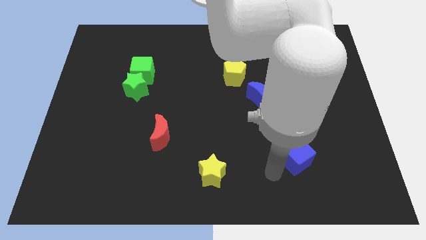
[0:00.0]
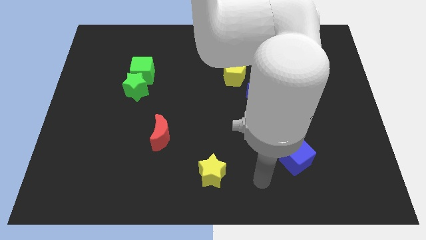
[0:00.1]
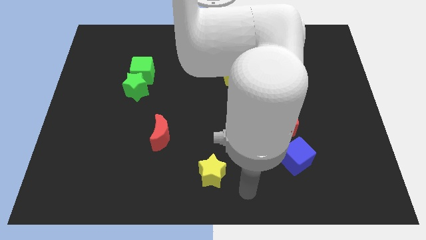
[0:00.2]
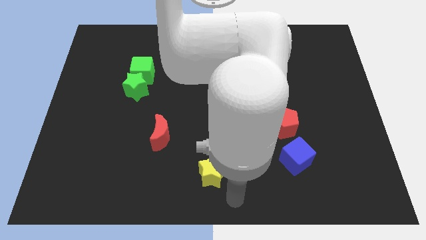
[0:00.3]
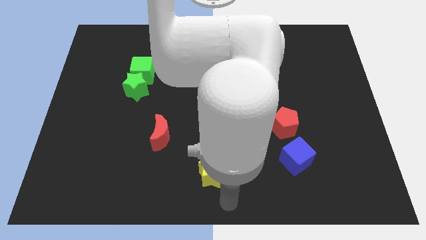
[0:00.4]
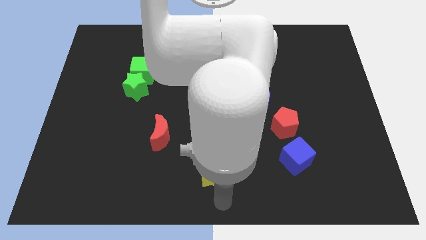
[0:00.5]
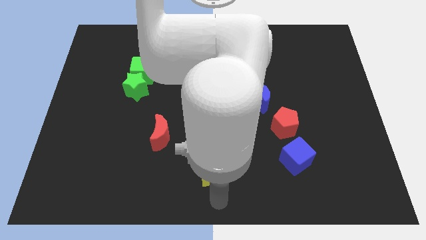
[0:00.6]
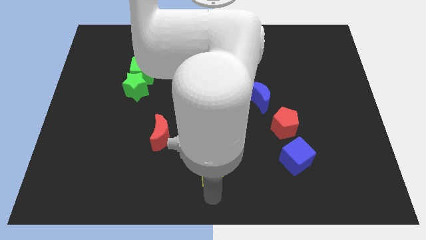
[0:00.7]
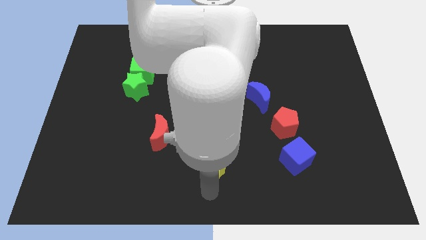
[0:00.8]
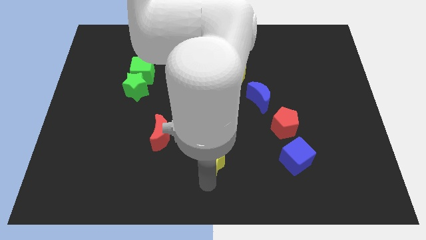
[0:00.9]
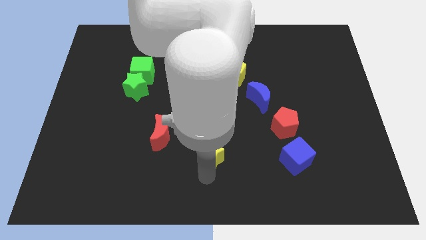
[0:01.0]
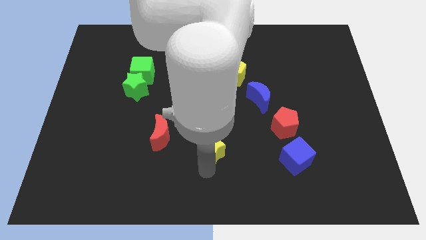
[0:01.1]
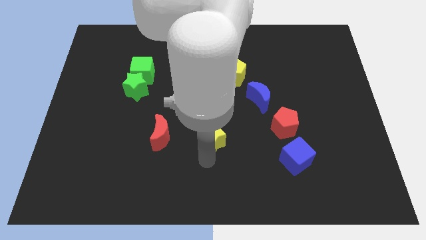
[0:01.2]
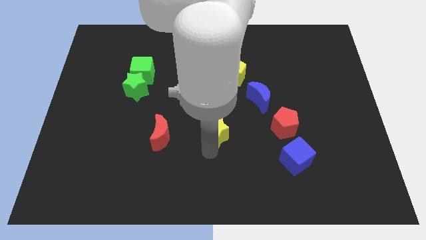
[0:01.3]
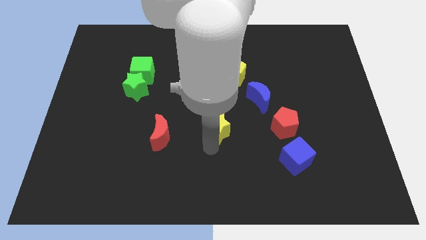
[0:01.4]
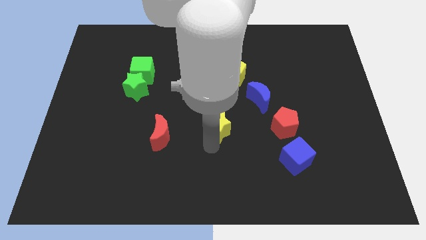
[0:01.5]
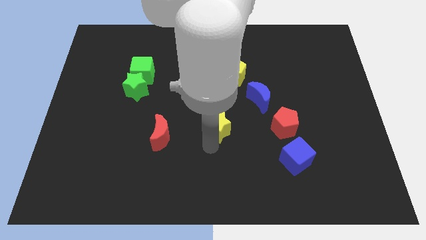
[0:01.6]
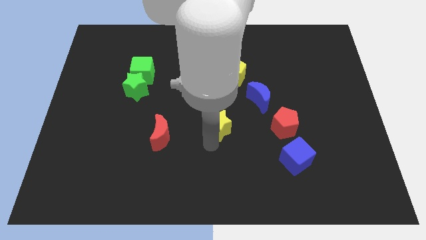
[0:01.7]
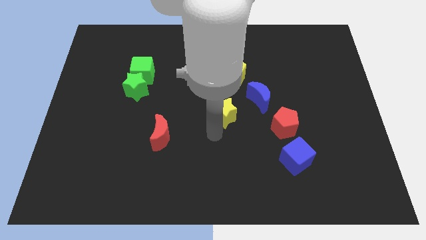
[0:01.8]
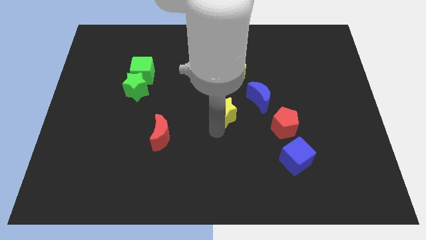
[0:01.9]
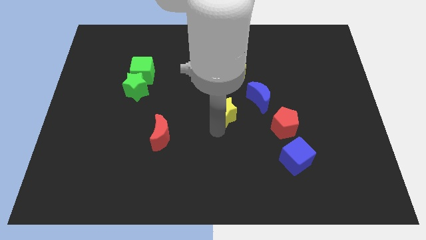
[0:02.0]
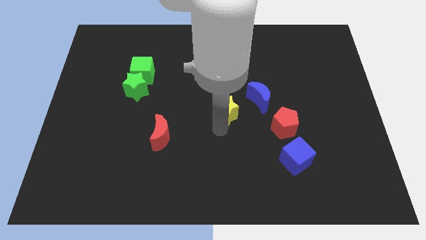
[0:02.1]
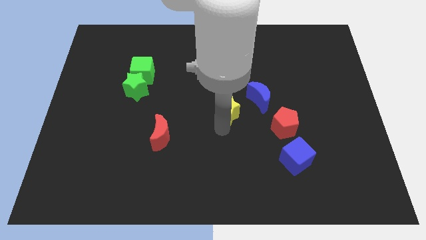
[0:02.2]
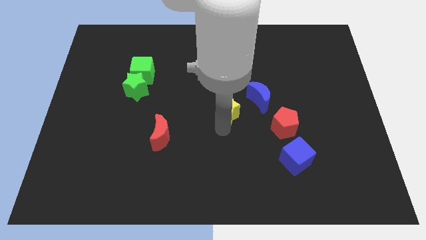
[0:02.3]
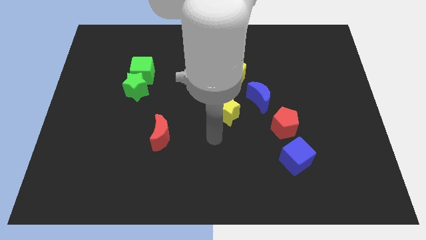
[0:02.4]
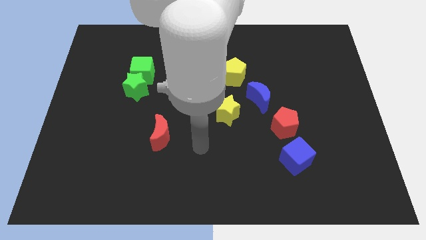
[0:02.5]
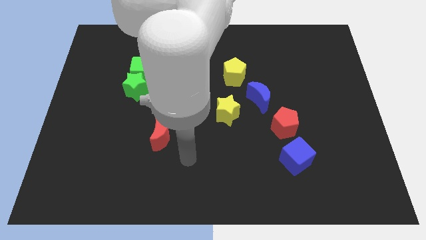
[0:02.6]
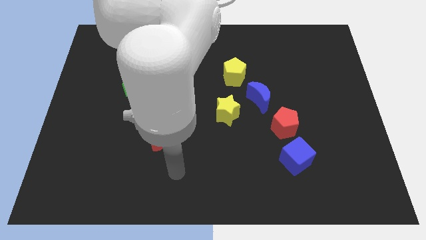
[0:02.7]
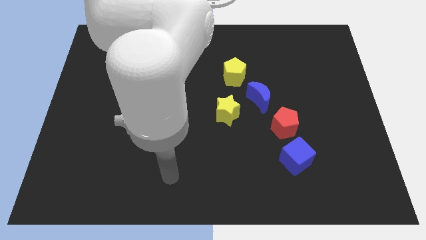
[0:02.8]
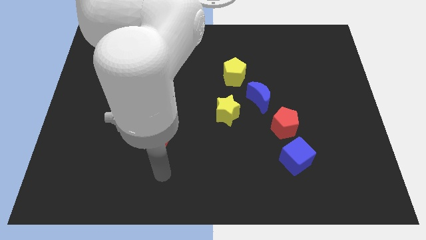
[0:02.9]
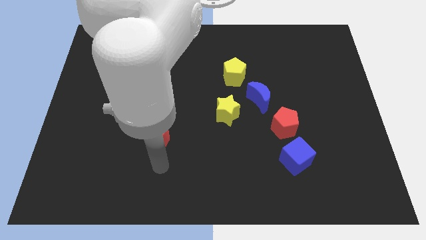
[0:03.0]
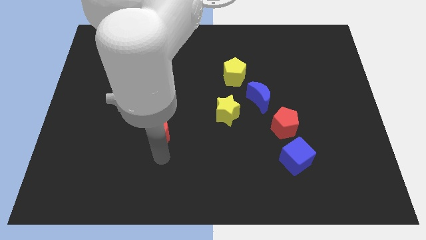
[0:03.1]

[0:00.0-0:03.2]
place the yellow star to the center of the board

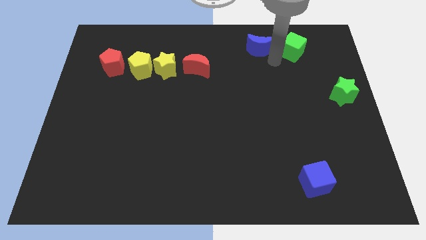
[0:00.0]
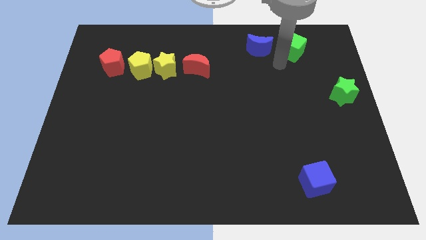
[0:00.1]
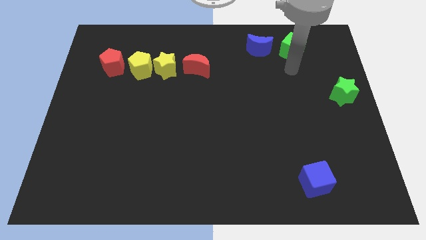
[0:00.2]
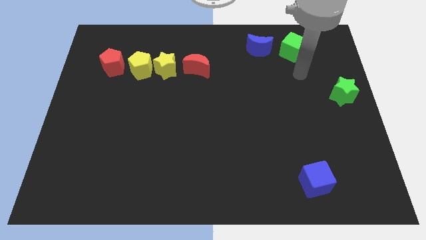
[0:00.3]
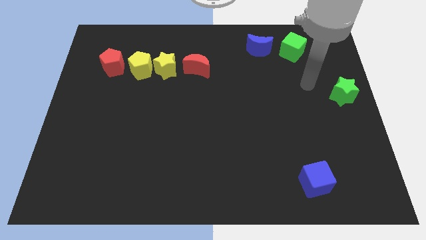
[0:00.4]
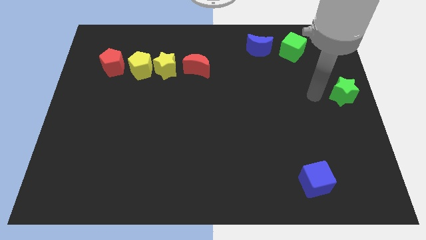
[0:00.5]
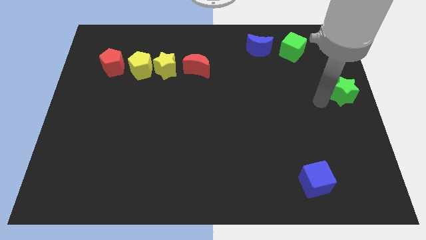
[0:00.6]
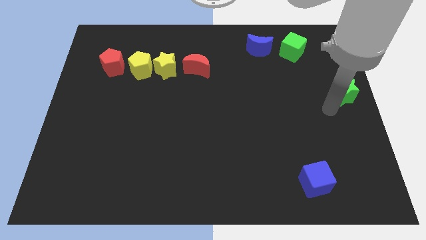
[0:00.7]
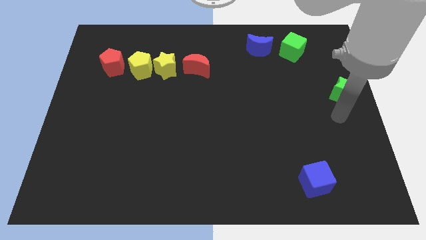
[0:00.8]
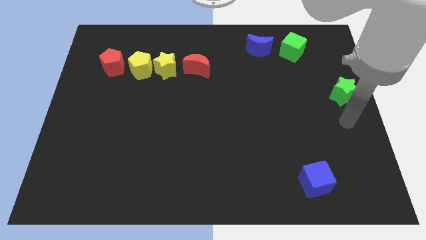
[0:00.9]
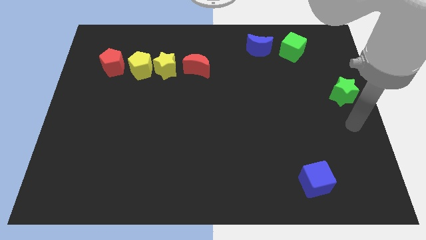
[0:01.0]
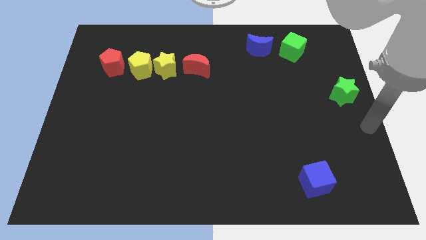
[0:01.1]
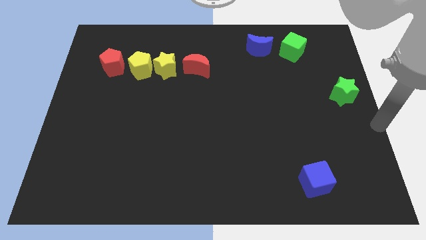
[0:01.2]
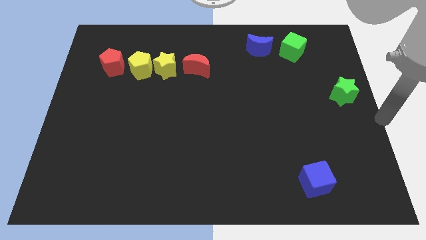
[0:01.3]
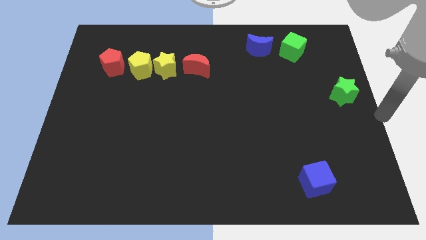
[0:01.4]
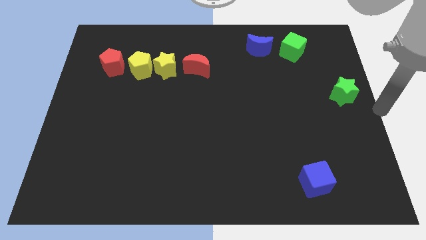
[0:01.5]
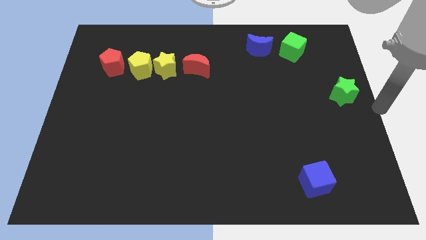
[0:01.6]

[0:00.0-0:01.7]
place your hand at right center of the board

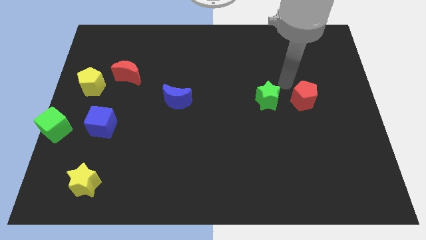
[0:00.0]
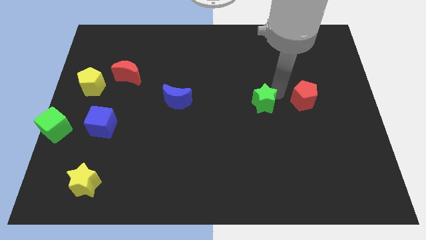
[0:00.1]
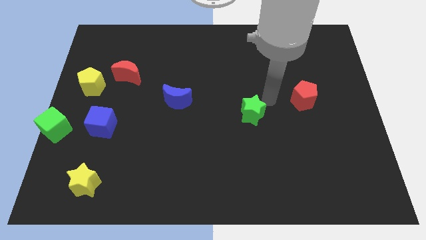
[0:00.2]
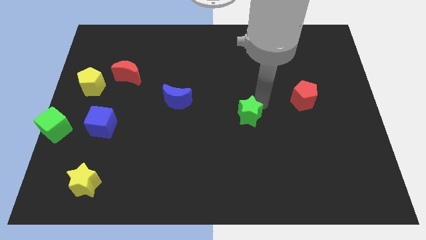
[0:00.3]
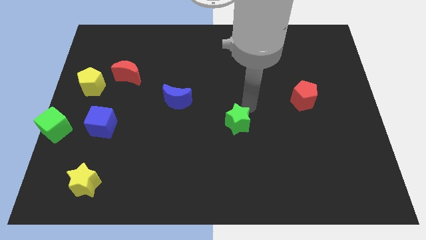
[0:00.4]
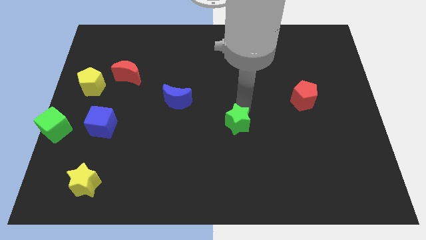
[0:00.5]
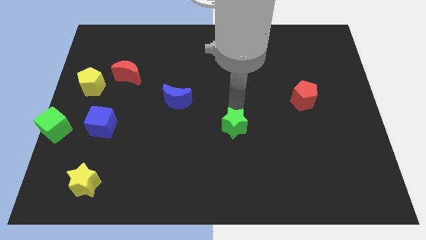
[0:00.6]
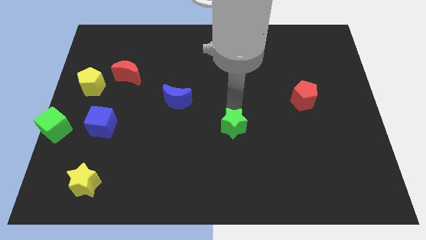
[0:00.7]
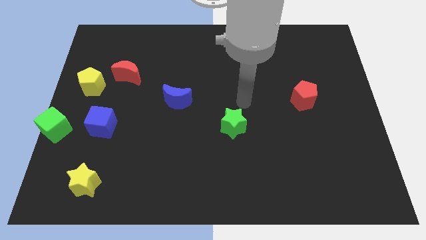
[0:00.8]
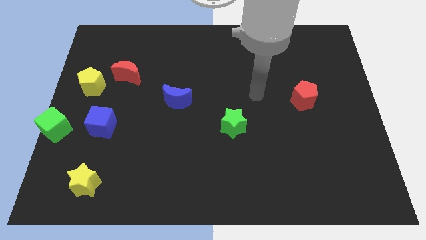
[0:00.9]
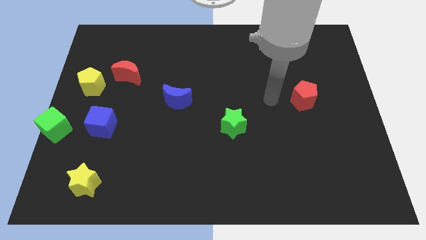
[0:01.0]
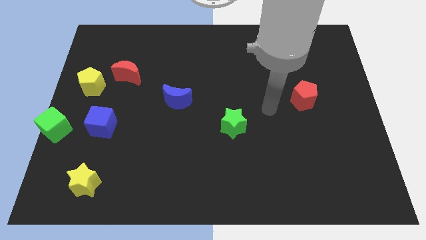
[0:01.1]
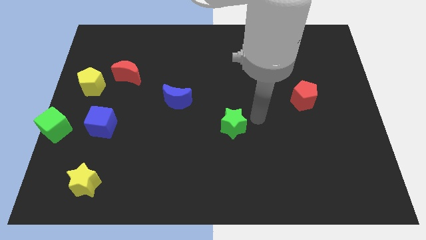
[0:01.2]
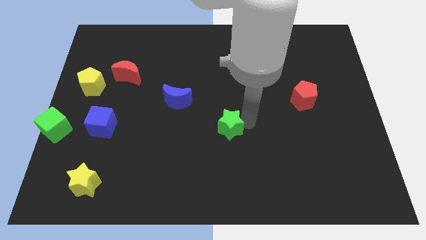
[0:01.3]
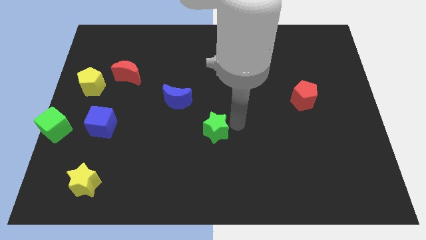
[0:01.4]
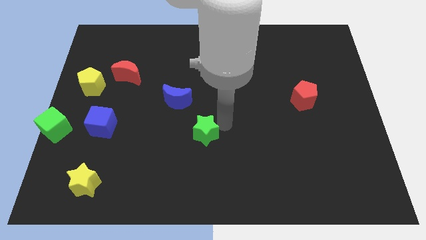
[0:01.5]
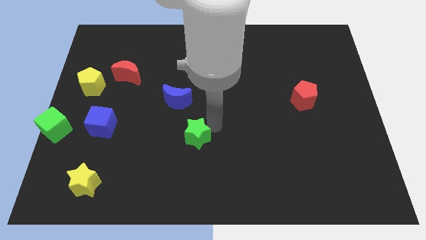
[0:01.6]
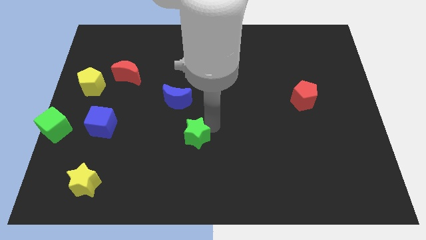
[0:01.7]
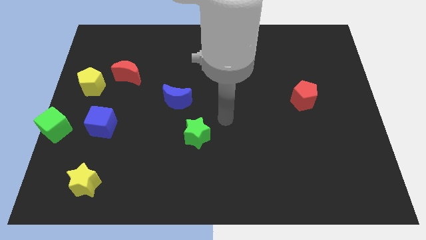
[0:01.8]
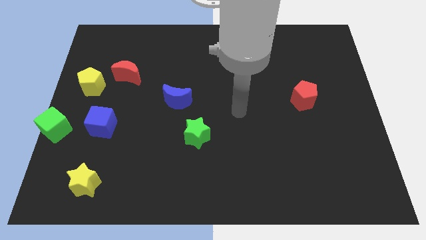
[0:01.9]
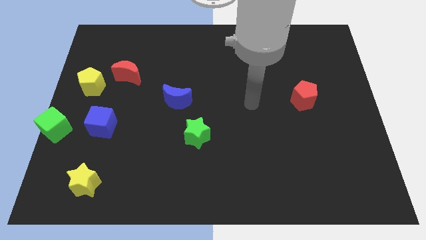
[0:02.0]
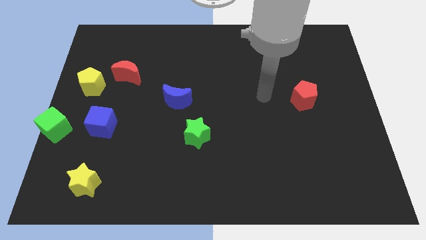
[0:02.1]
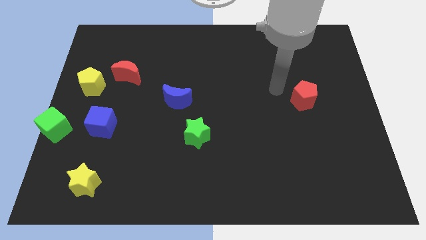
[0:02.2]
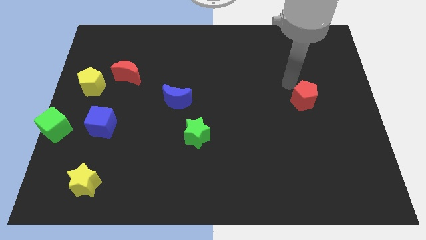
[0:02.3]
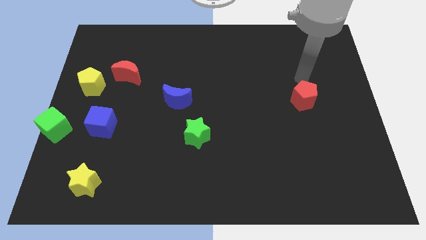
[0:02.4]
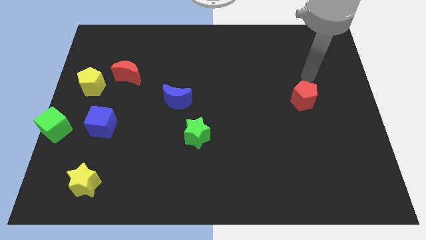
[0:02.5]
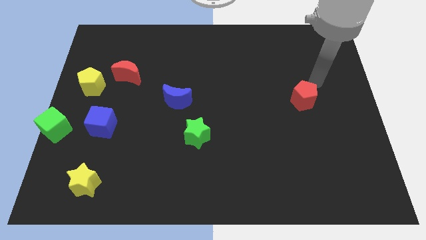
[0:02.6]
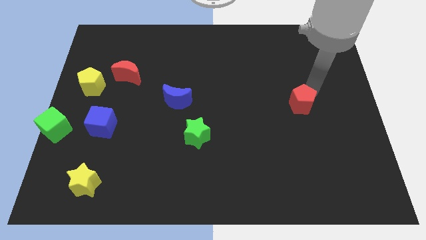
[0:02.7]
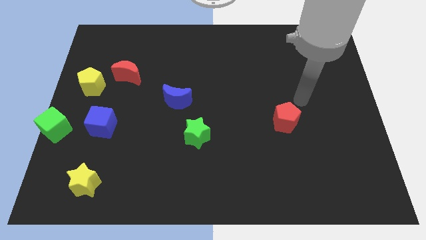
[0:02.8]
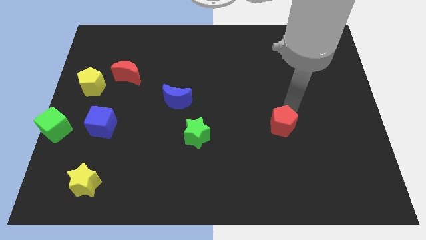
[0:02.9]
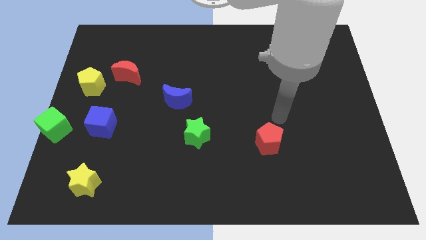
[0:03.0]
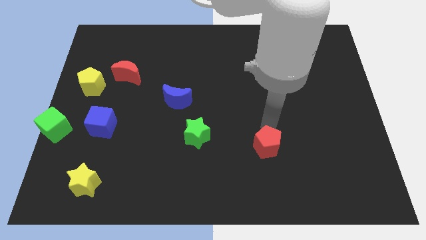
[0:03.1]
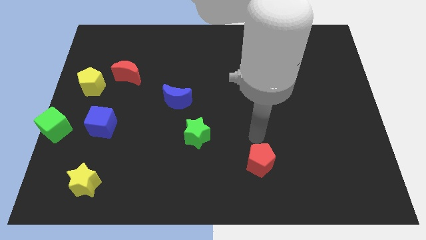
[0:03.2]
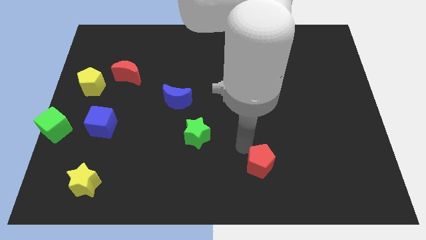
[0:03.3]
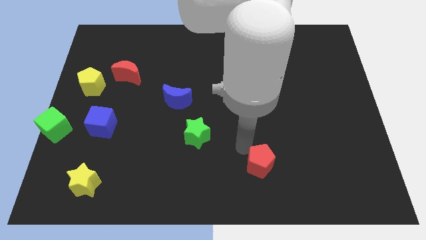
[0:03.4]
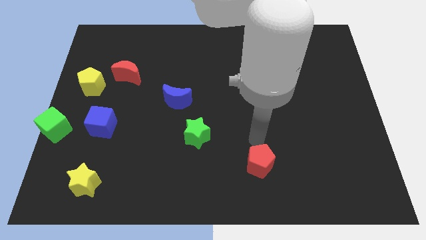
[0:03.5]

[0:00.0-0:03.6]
place the green star and red penatgon to right side of blue moon

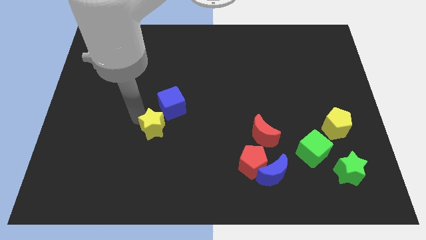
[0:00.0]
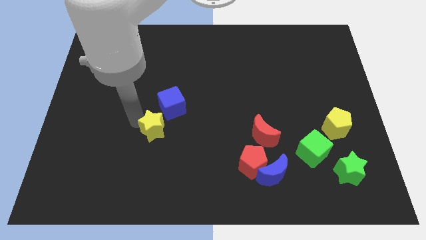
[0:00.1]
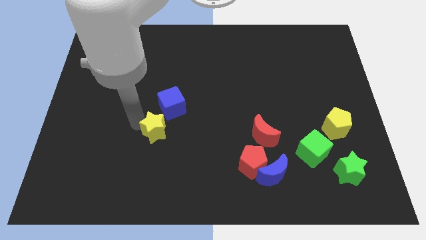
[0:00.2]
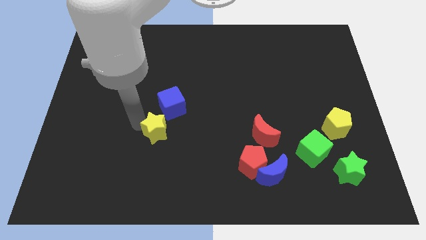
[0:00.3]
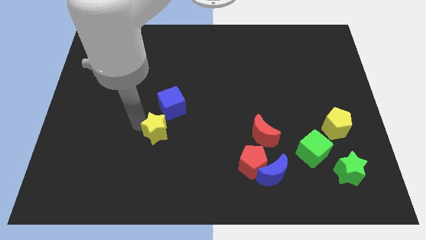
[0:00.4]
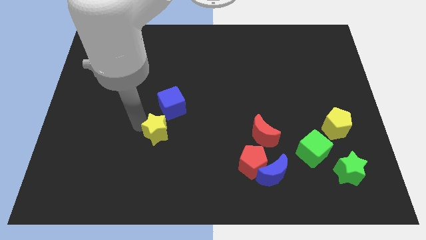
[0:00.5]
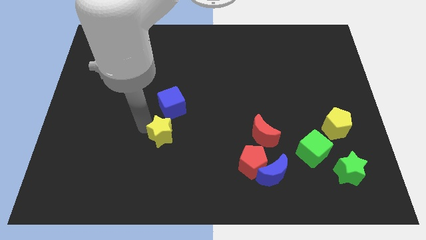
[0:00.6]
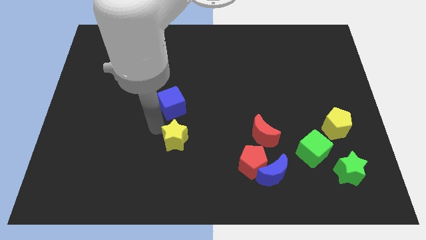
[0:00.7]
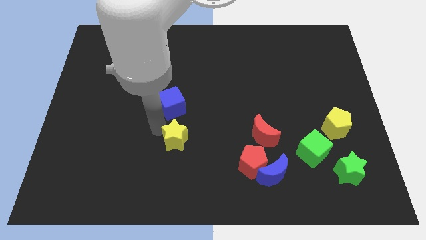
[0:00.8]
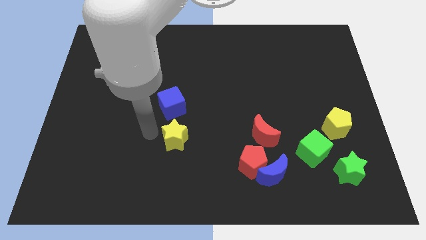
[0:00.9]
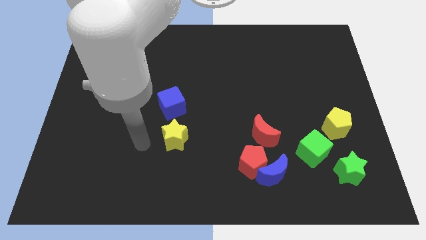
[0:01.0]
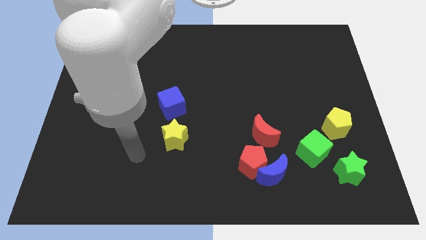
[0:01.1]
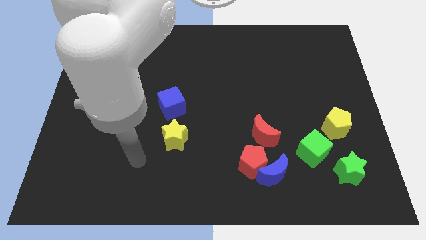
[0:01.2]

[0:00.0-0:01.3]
move yellow star below blue cube
